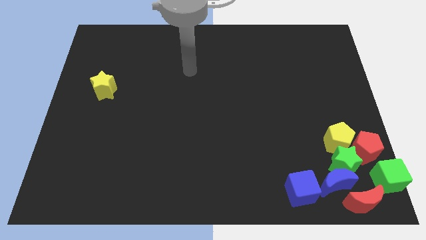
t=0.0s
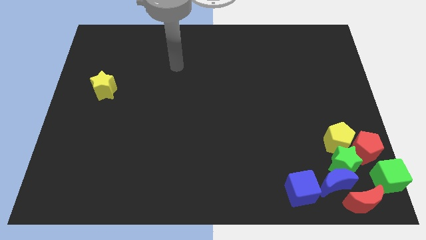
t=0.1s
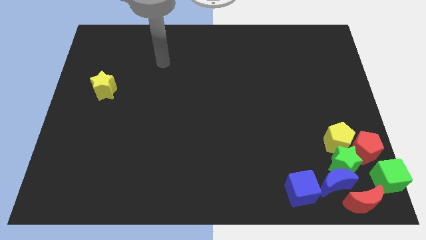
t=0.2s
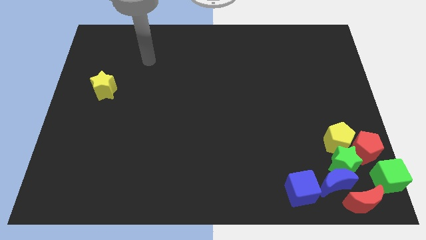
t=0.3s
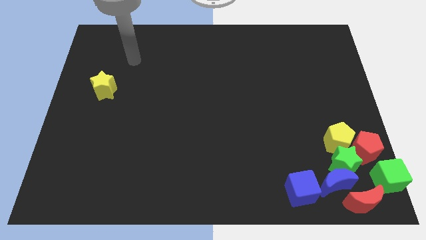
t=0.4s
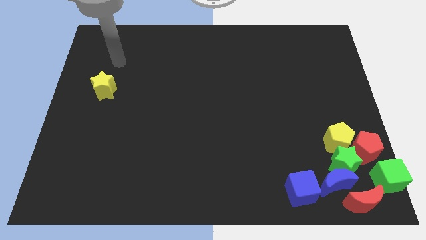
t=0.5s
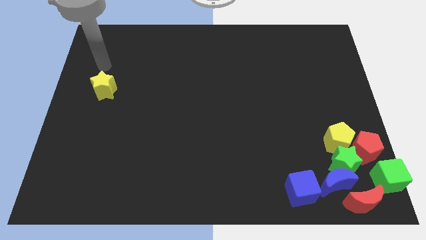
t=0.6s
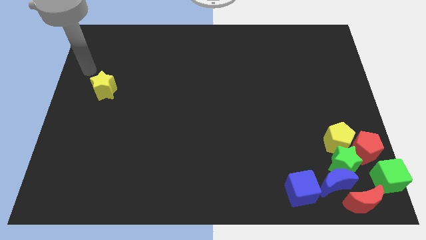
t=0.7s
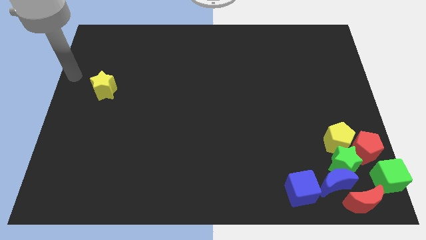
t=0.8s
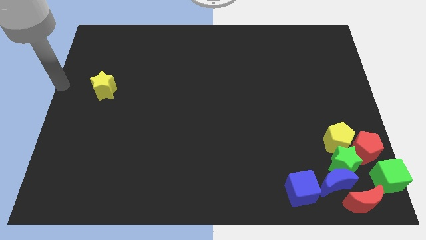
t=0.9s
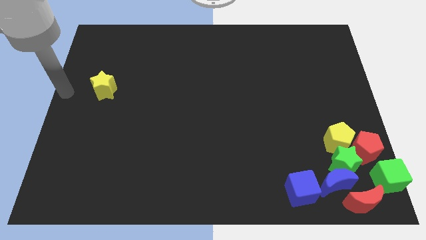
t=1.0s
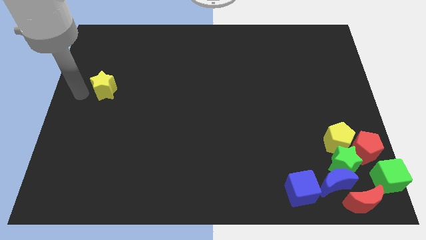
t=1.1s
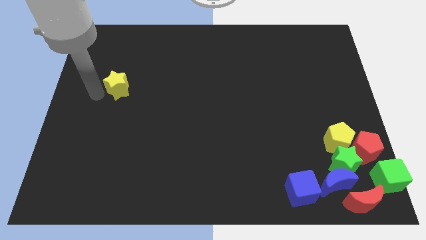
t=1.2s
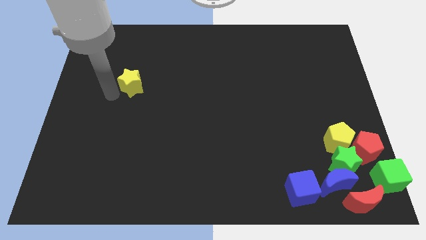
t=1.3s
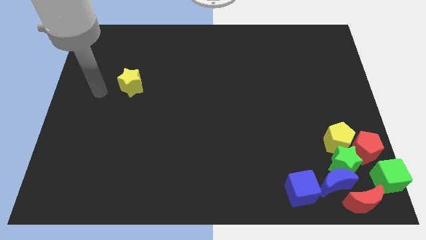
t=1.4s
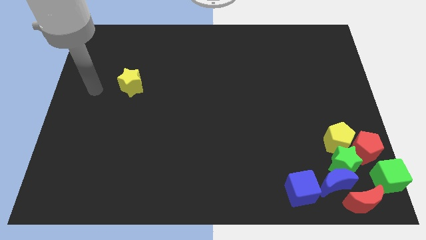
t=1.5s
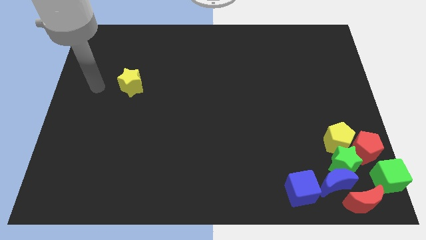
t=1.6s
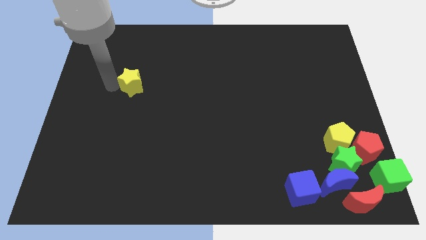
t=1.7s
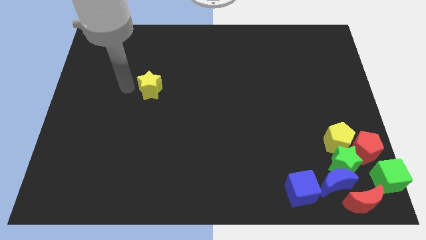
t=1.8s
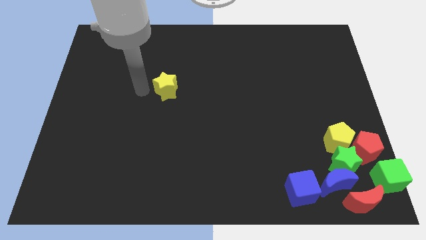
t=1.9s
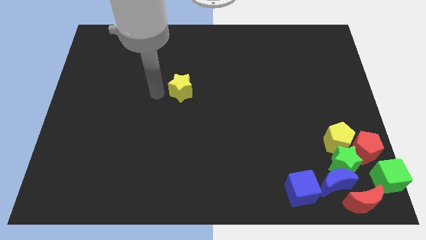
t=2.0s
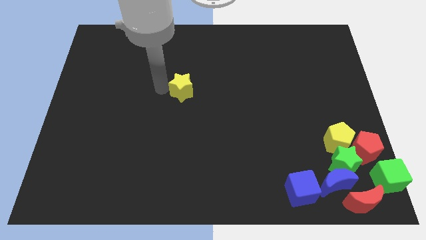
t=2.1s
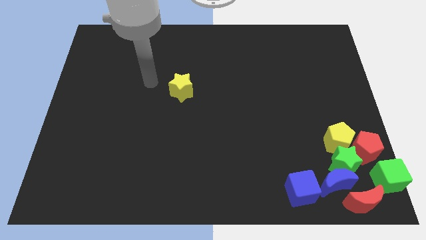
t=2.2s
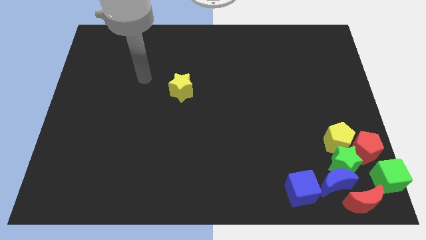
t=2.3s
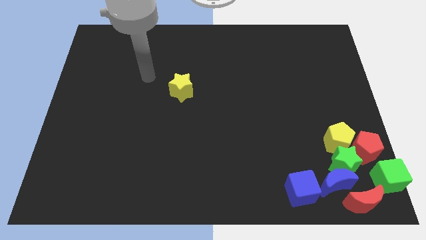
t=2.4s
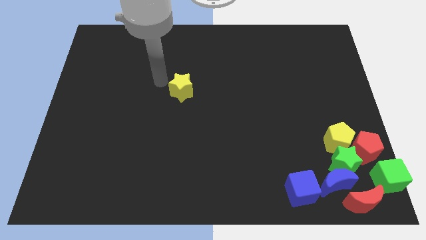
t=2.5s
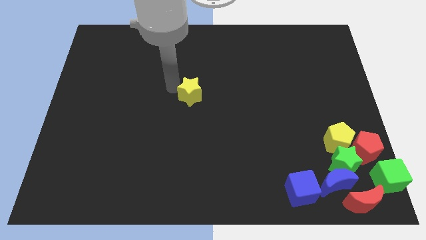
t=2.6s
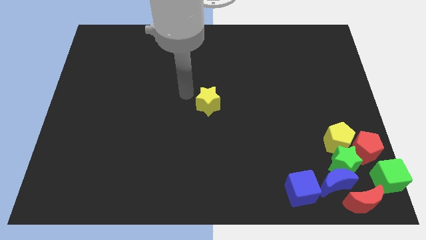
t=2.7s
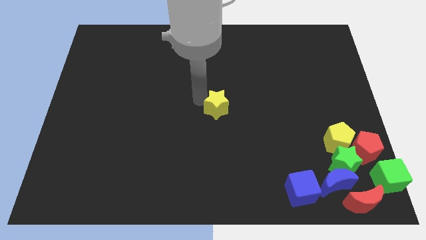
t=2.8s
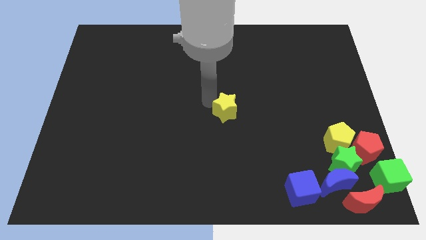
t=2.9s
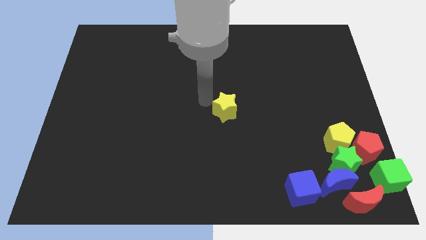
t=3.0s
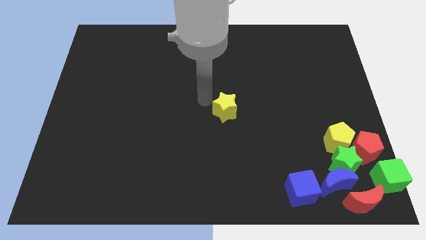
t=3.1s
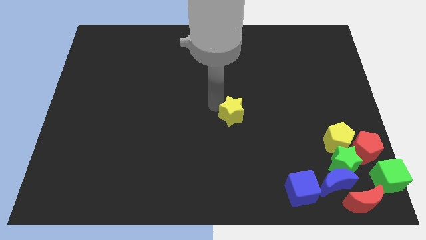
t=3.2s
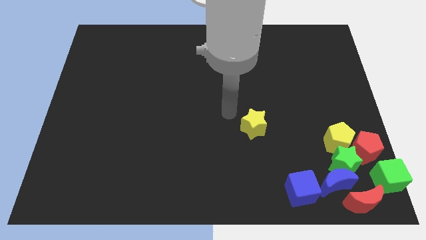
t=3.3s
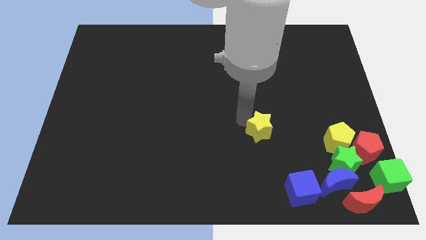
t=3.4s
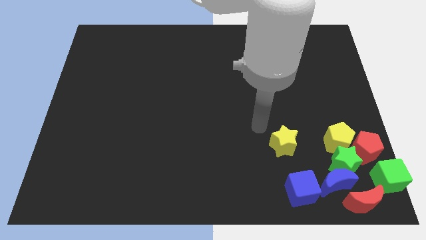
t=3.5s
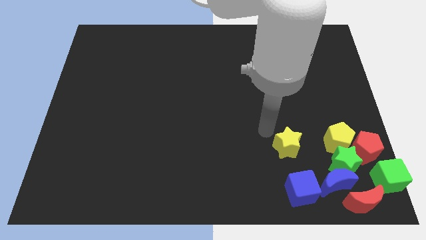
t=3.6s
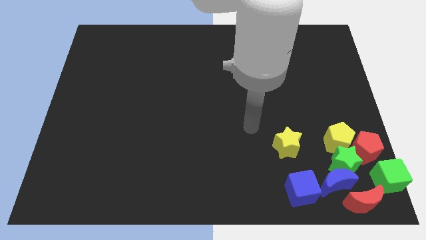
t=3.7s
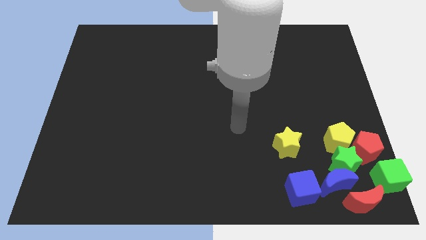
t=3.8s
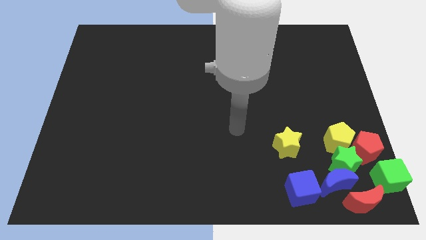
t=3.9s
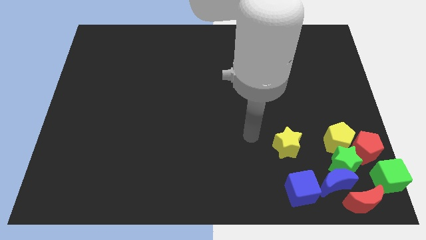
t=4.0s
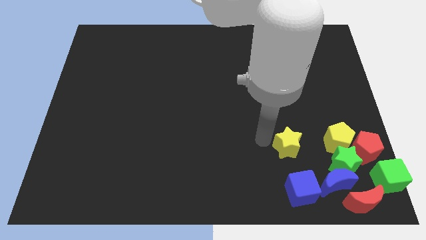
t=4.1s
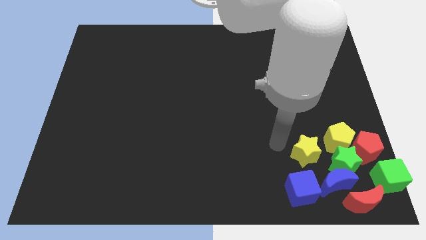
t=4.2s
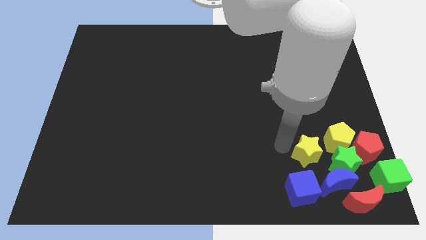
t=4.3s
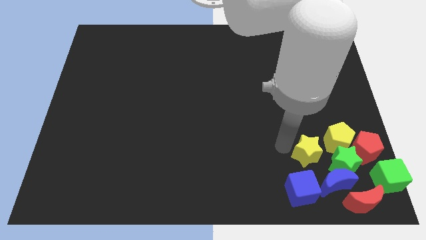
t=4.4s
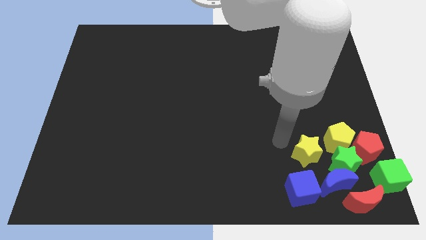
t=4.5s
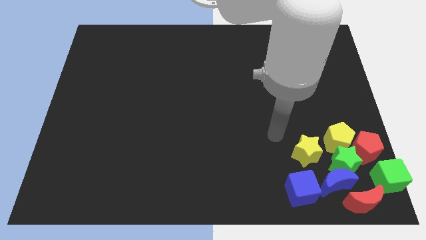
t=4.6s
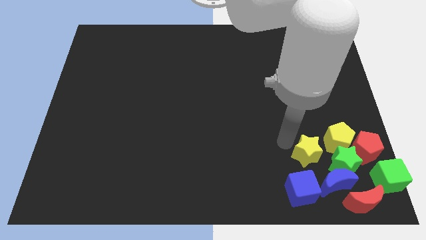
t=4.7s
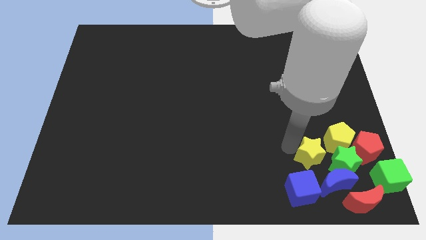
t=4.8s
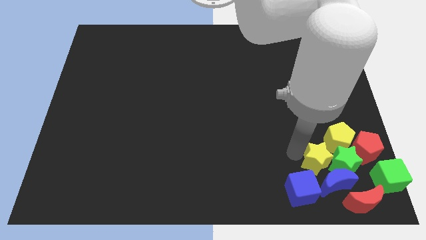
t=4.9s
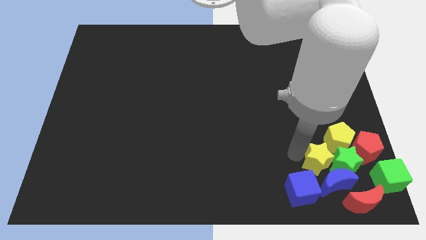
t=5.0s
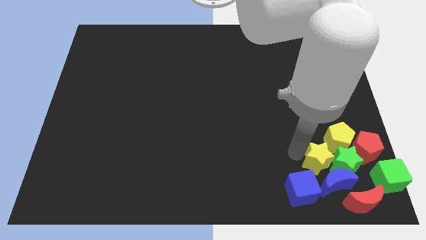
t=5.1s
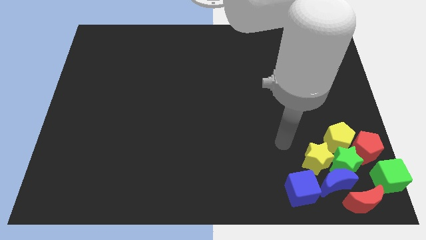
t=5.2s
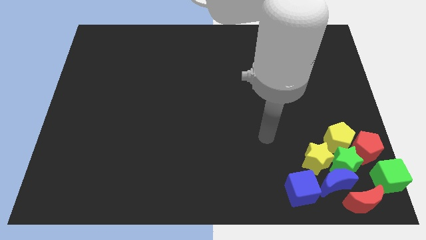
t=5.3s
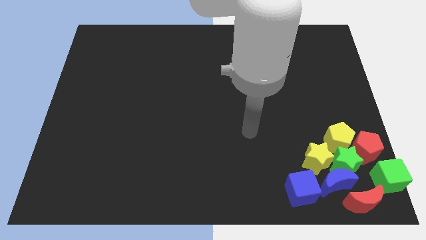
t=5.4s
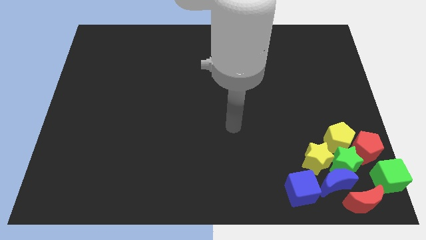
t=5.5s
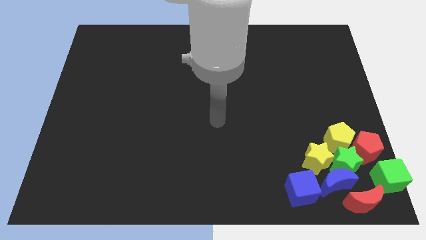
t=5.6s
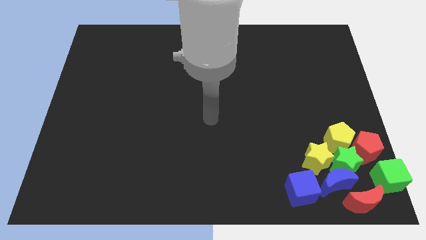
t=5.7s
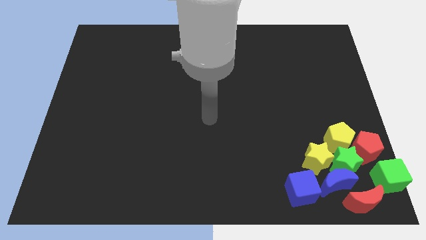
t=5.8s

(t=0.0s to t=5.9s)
put the yellow star to the left side of the green star

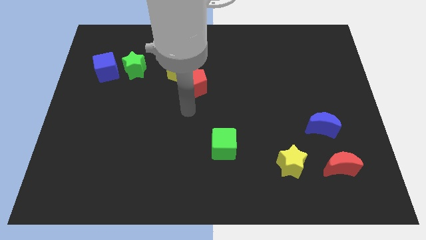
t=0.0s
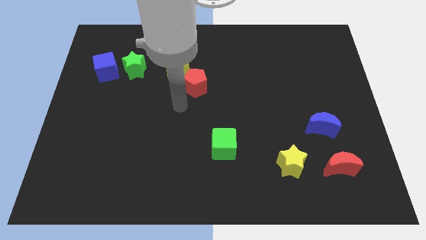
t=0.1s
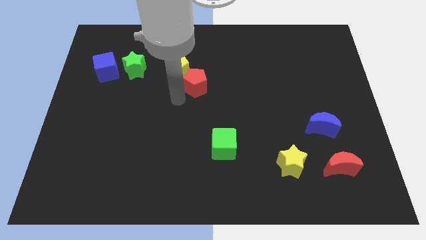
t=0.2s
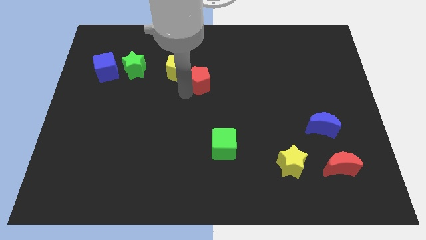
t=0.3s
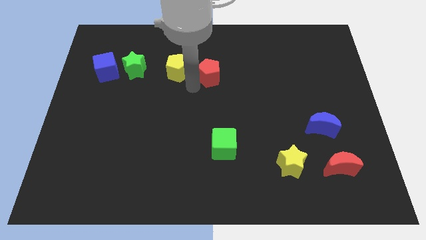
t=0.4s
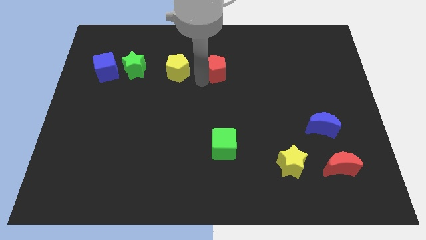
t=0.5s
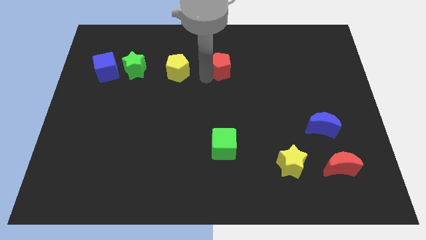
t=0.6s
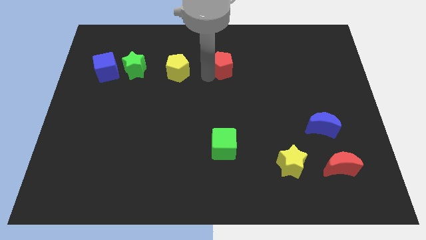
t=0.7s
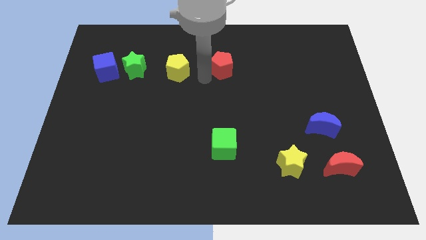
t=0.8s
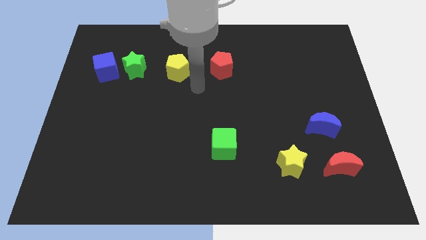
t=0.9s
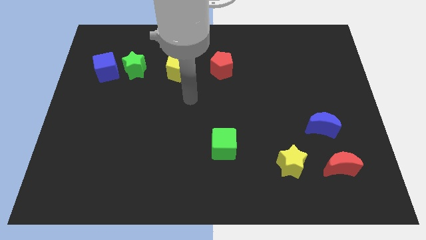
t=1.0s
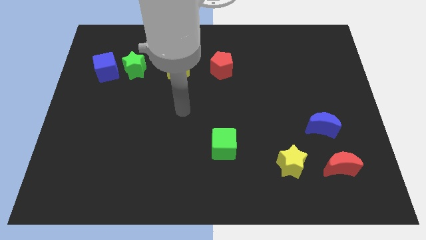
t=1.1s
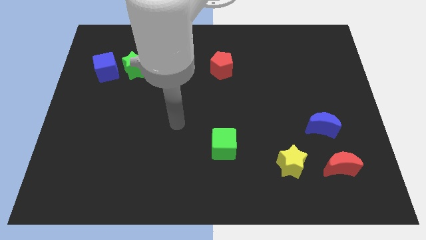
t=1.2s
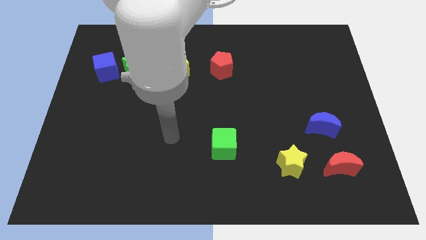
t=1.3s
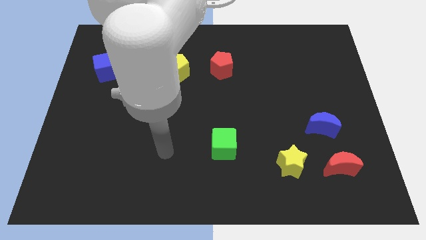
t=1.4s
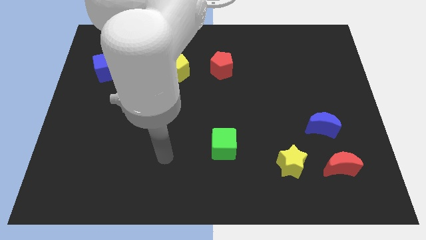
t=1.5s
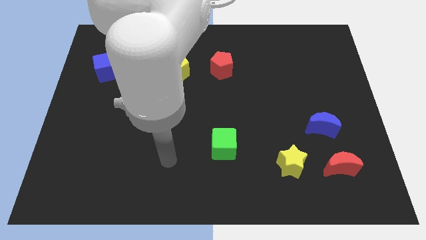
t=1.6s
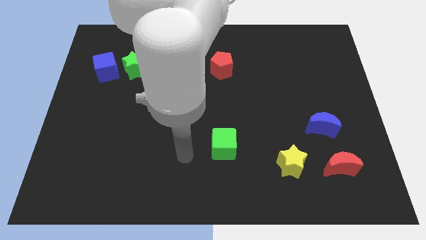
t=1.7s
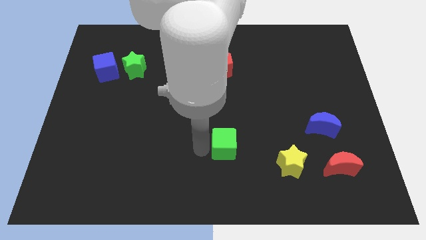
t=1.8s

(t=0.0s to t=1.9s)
move the red pentagon towards the right side of the yellow pentagon

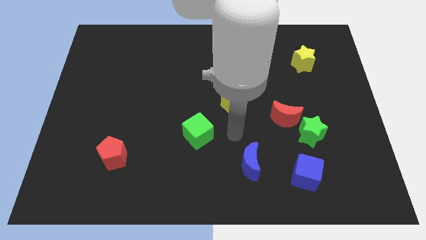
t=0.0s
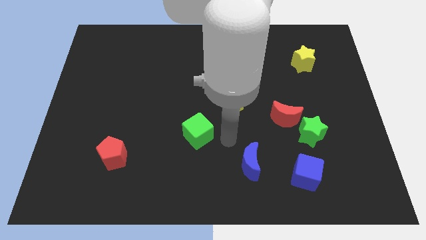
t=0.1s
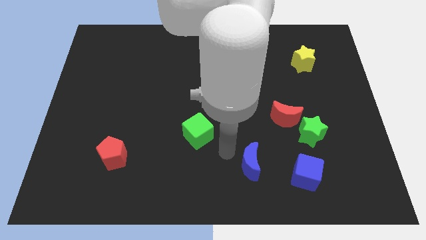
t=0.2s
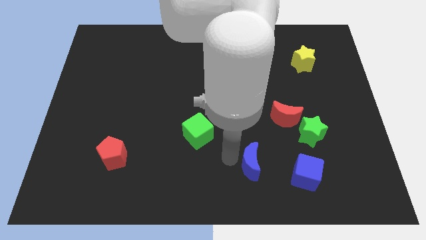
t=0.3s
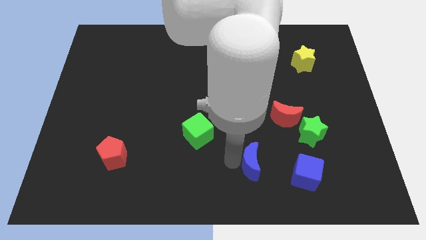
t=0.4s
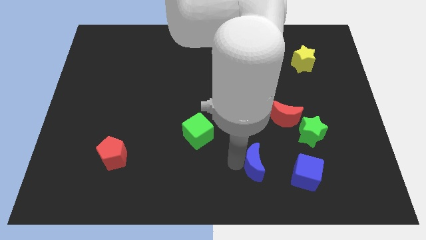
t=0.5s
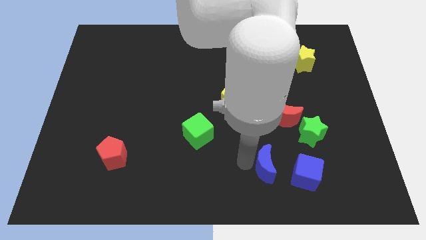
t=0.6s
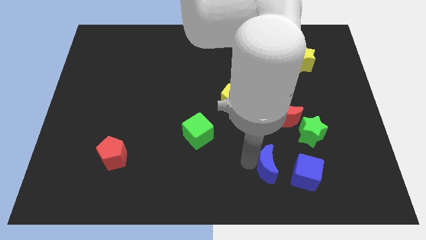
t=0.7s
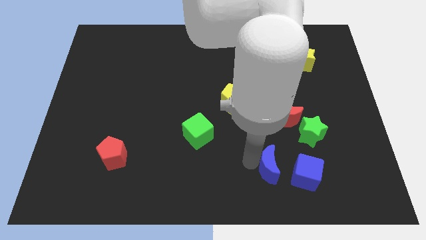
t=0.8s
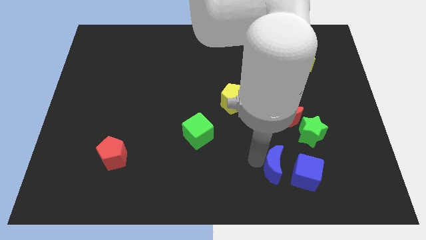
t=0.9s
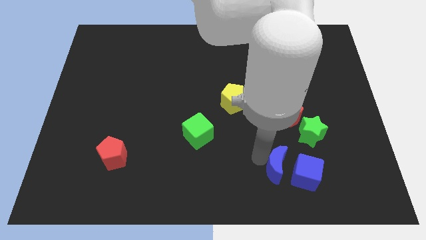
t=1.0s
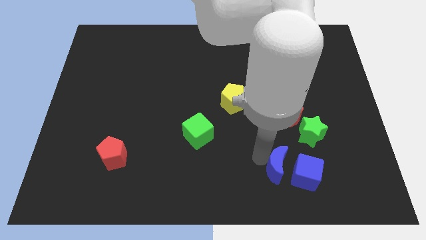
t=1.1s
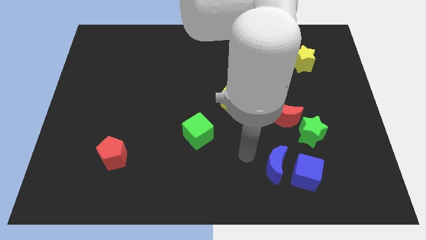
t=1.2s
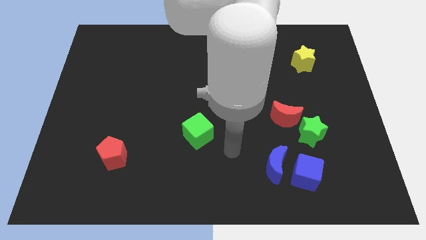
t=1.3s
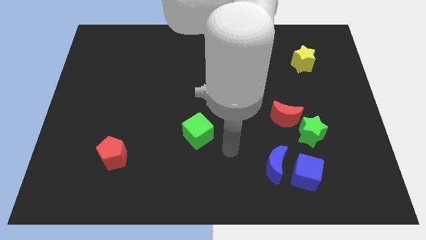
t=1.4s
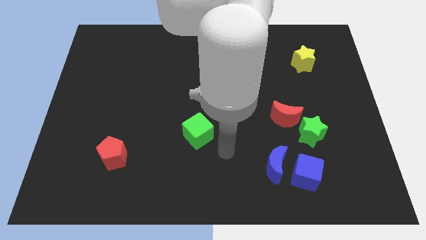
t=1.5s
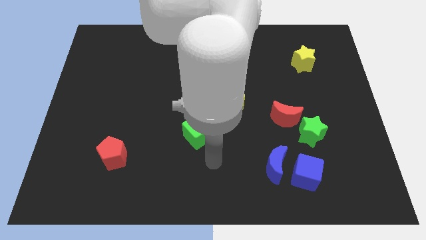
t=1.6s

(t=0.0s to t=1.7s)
move the blue moon close to the blue cube
